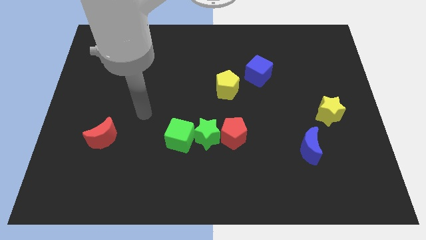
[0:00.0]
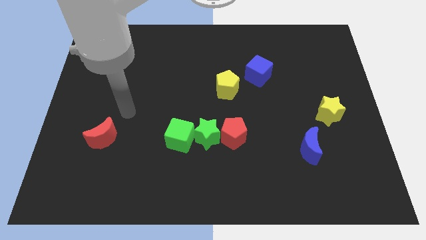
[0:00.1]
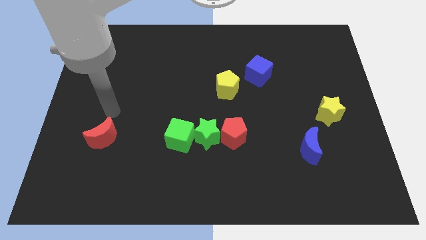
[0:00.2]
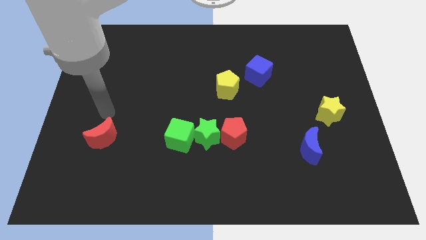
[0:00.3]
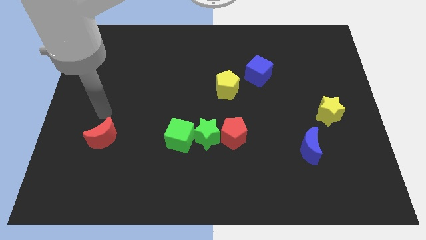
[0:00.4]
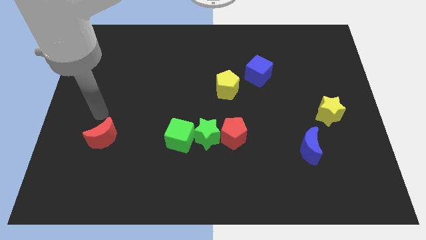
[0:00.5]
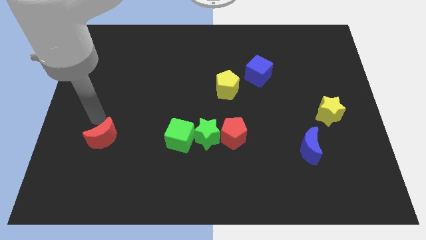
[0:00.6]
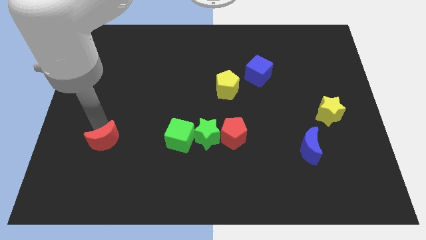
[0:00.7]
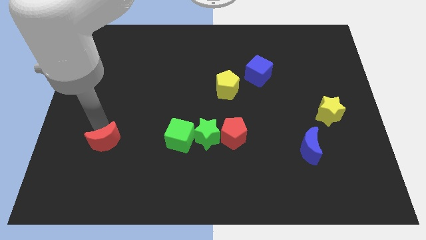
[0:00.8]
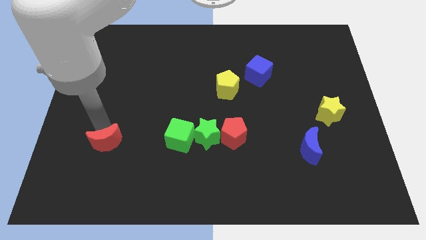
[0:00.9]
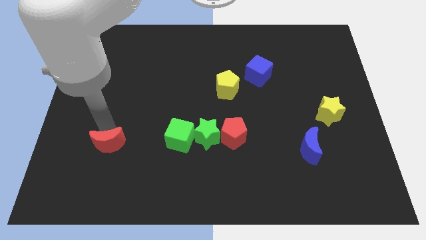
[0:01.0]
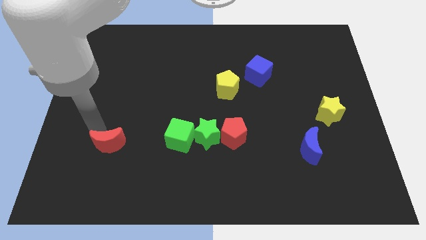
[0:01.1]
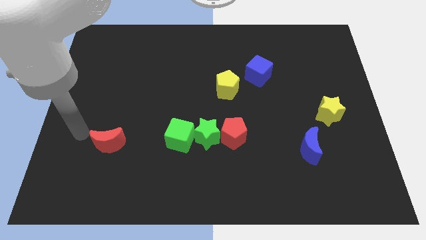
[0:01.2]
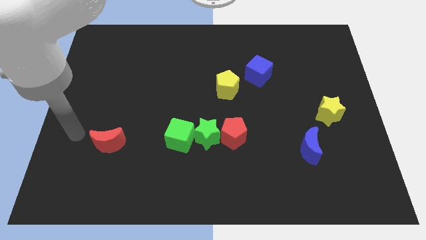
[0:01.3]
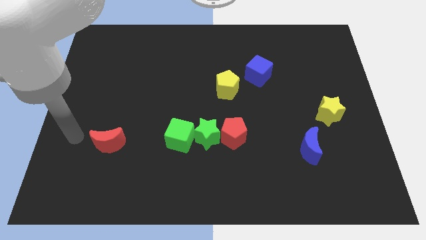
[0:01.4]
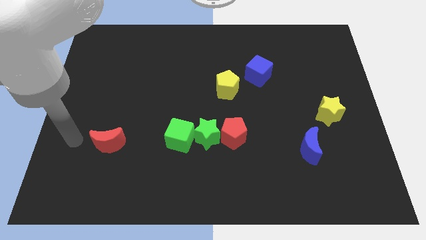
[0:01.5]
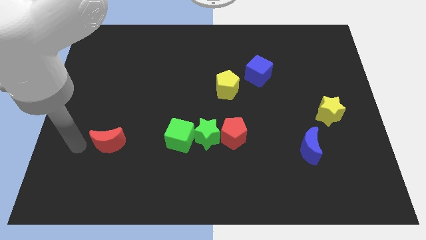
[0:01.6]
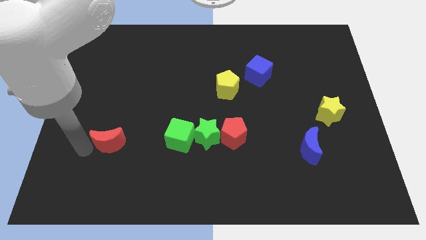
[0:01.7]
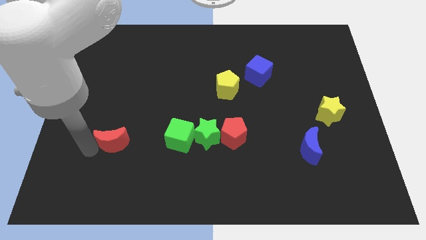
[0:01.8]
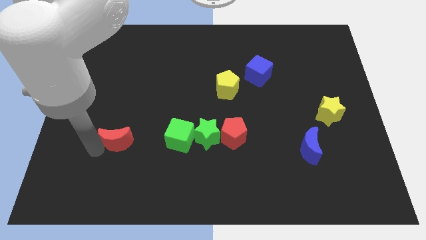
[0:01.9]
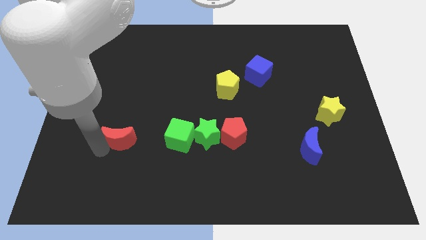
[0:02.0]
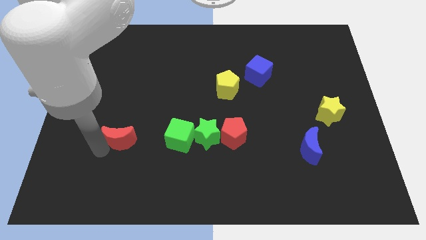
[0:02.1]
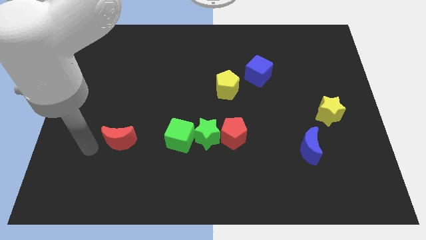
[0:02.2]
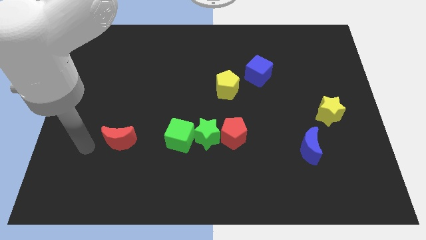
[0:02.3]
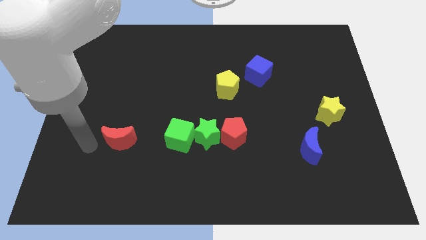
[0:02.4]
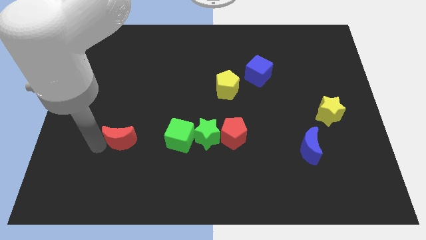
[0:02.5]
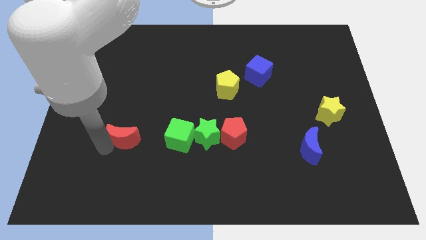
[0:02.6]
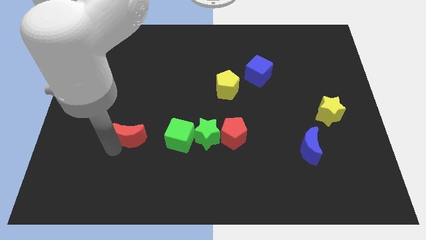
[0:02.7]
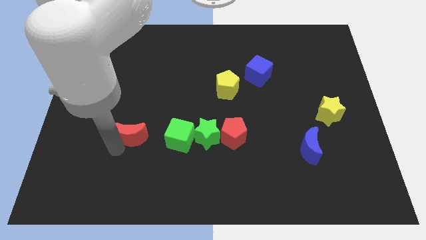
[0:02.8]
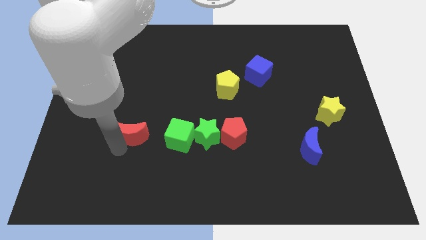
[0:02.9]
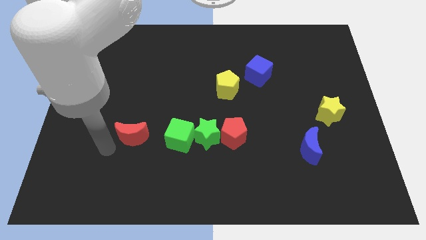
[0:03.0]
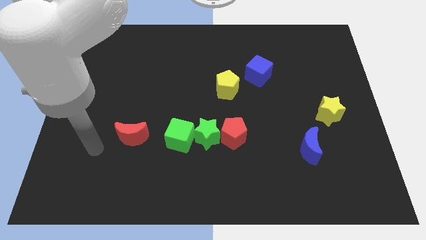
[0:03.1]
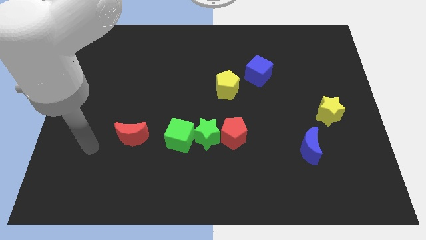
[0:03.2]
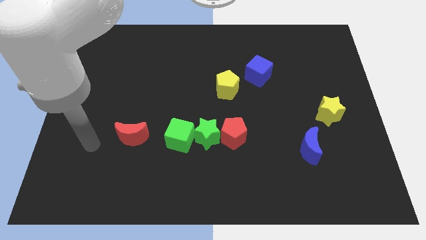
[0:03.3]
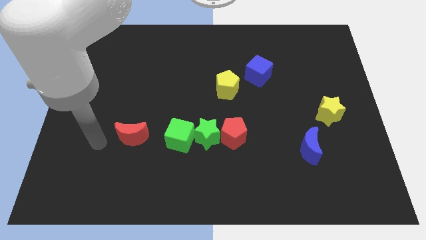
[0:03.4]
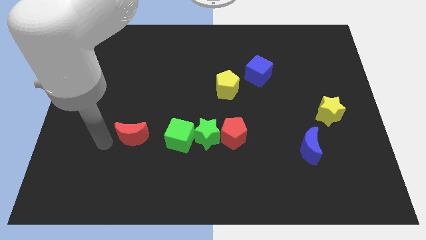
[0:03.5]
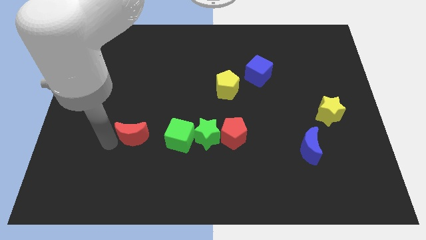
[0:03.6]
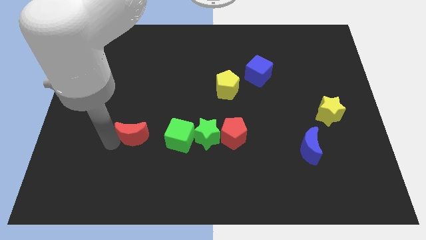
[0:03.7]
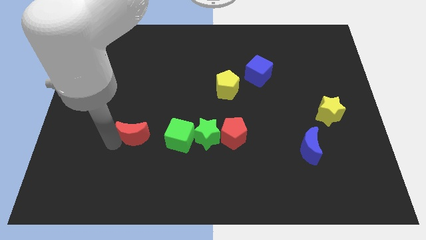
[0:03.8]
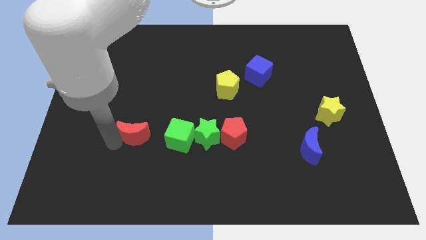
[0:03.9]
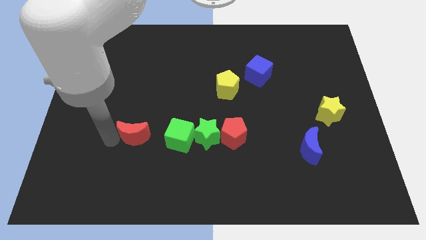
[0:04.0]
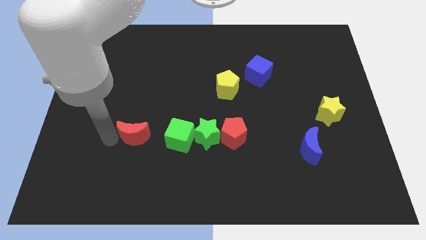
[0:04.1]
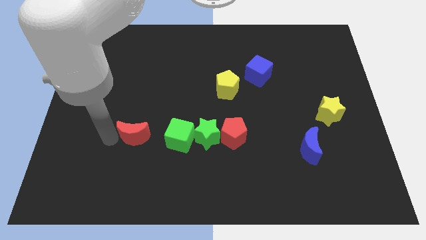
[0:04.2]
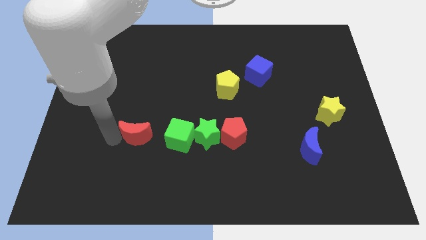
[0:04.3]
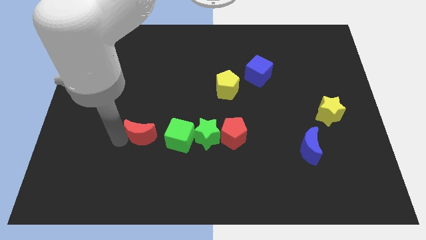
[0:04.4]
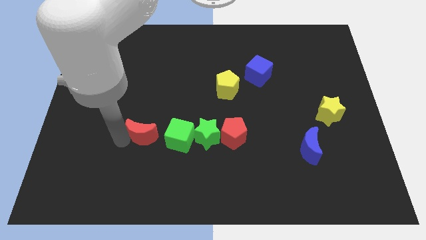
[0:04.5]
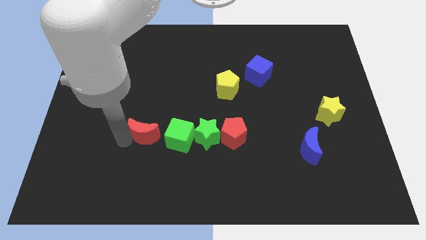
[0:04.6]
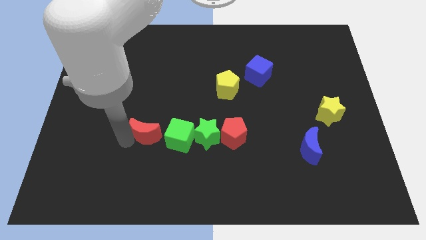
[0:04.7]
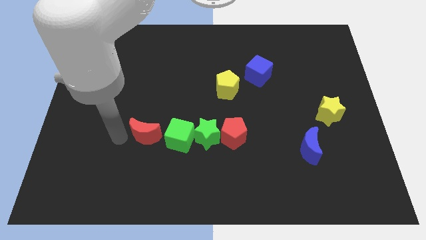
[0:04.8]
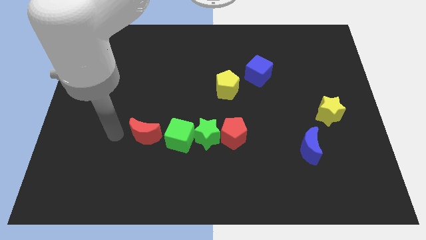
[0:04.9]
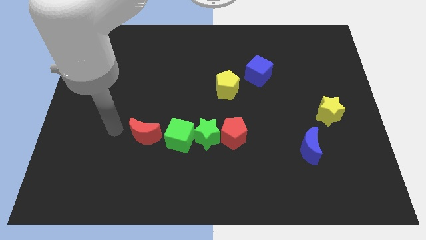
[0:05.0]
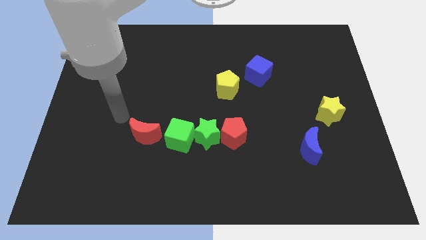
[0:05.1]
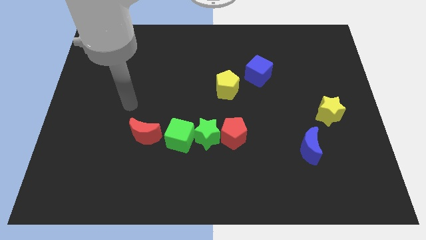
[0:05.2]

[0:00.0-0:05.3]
push the red crescent towards the left of the green cube

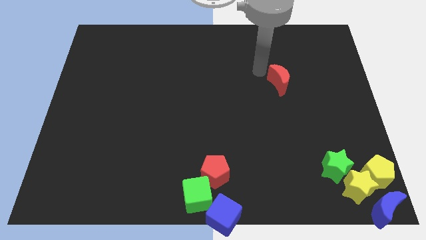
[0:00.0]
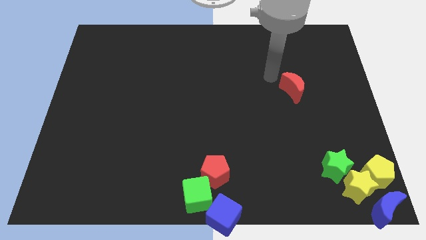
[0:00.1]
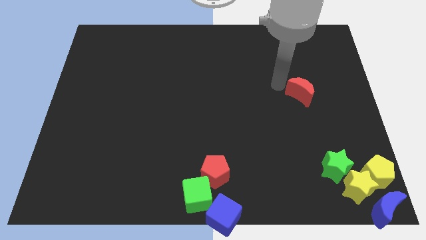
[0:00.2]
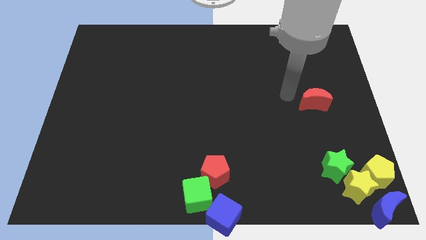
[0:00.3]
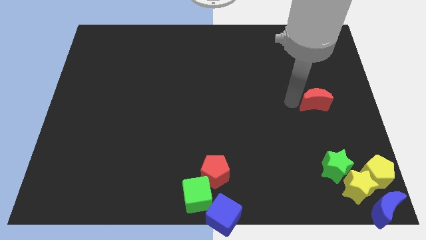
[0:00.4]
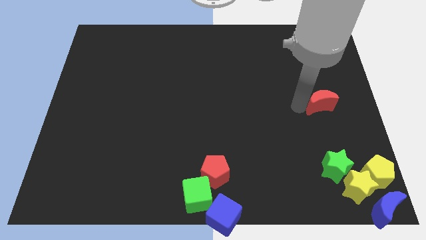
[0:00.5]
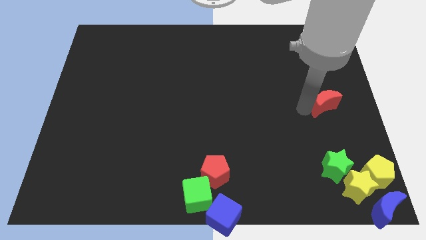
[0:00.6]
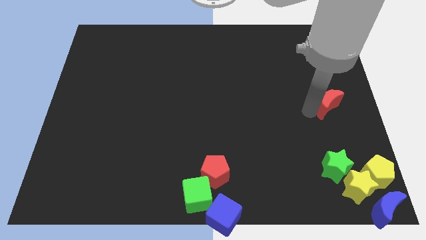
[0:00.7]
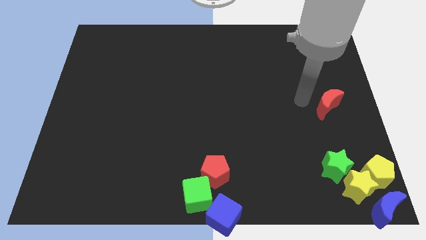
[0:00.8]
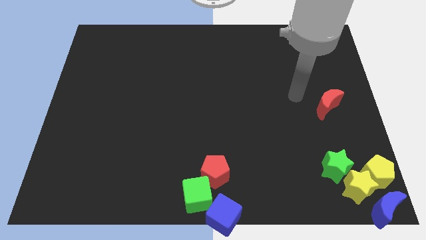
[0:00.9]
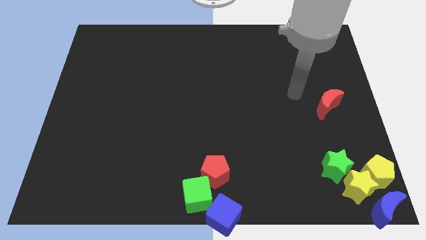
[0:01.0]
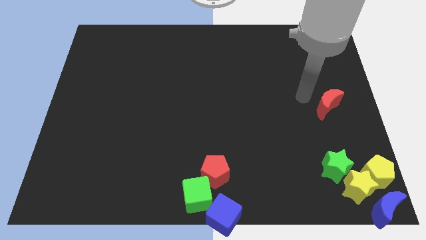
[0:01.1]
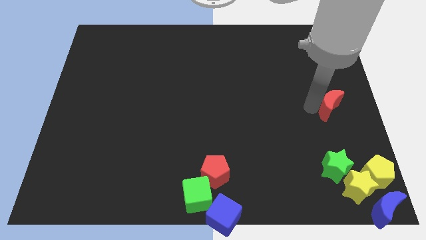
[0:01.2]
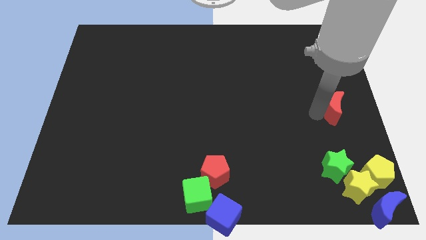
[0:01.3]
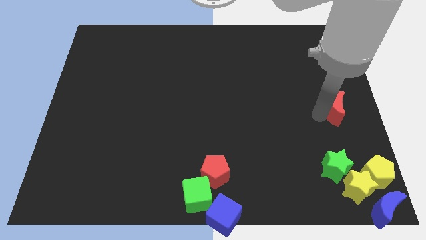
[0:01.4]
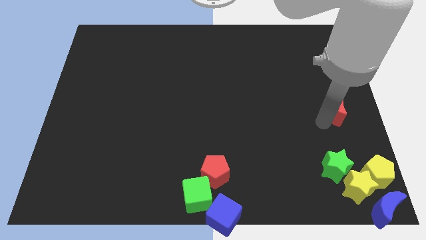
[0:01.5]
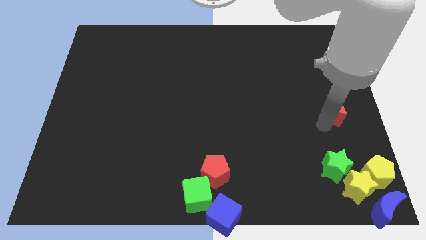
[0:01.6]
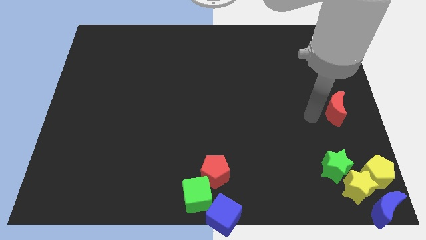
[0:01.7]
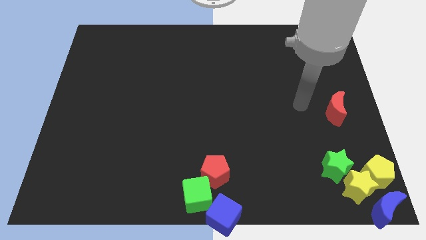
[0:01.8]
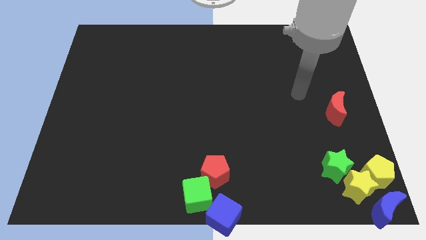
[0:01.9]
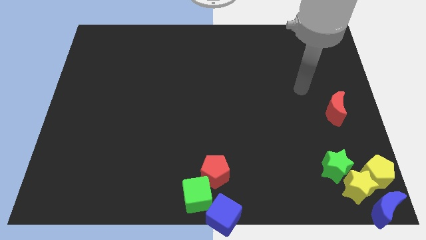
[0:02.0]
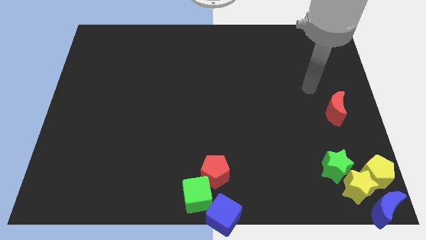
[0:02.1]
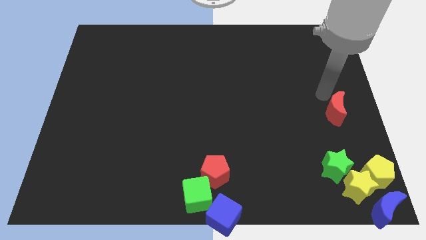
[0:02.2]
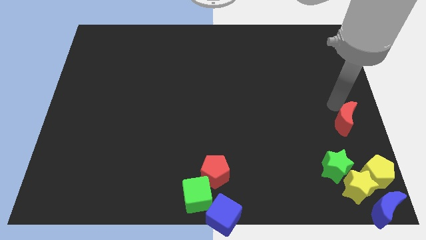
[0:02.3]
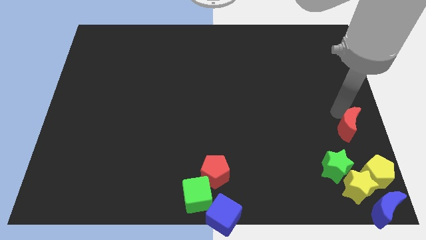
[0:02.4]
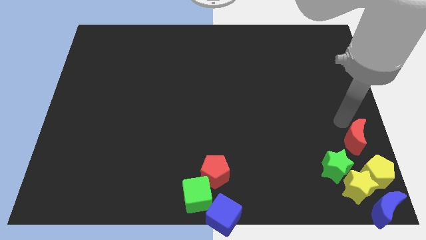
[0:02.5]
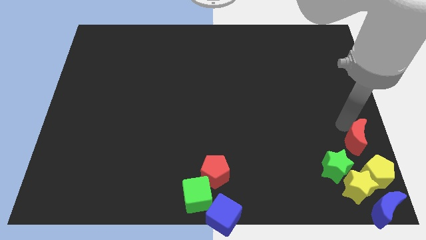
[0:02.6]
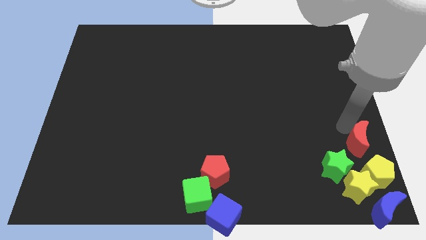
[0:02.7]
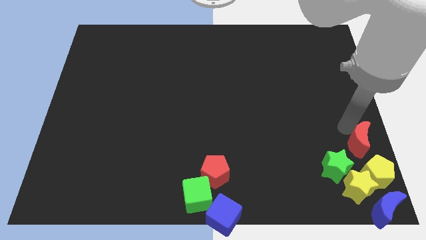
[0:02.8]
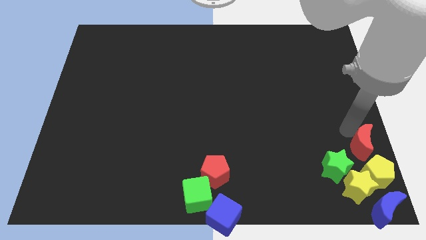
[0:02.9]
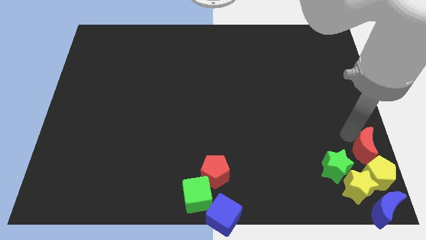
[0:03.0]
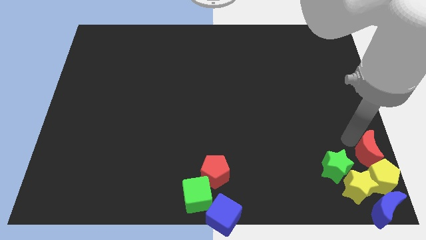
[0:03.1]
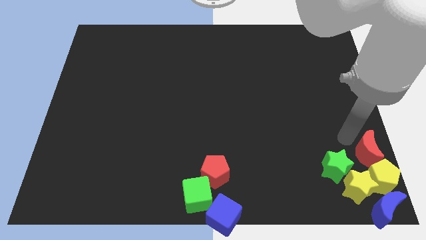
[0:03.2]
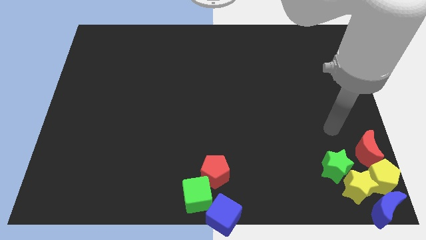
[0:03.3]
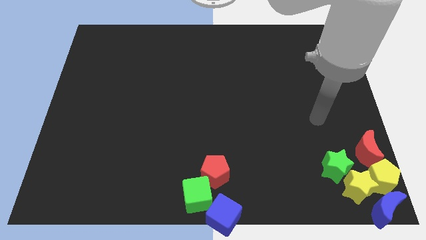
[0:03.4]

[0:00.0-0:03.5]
push the red crescent above to the yellow pentagon
